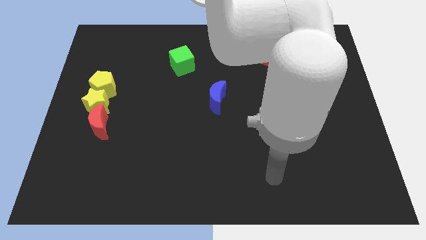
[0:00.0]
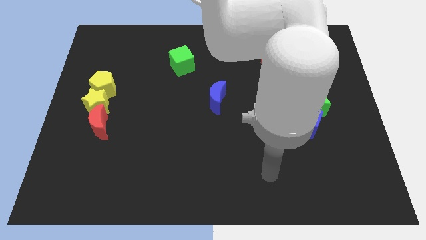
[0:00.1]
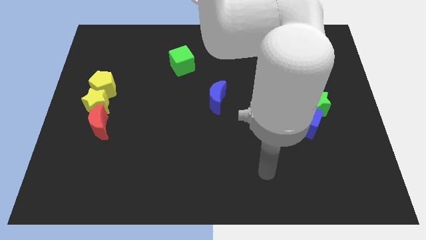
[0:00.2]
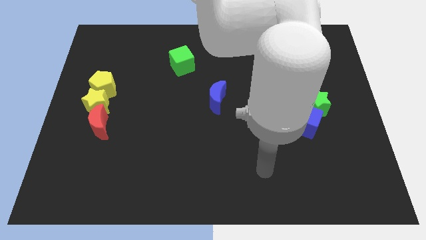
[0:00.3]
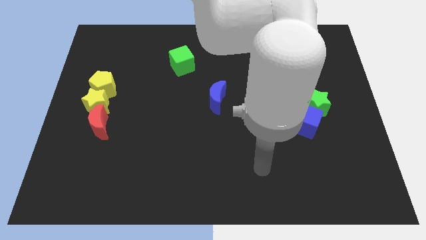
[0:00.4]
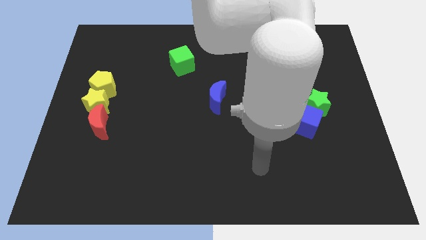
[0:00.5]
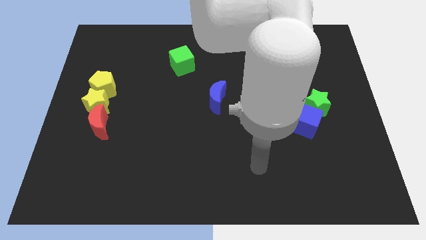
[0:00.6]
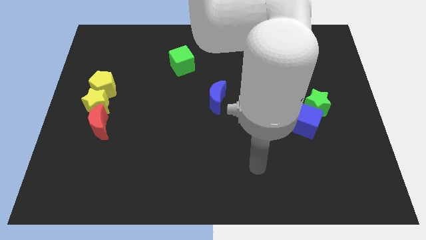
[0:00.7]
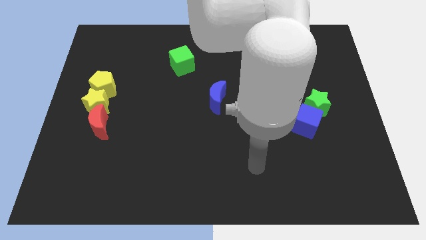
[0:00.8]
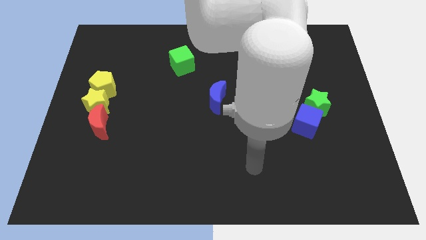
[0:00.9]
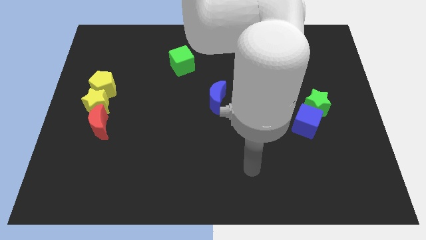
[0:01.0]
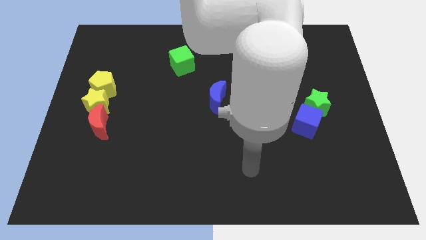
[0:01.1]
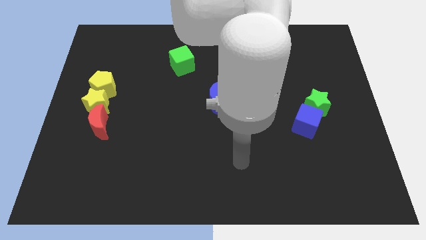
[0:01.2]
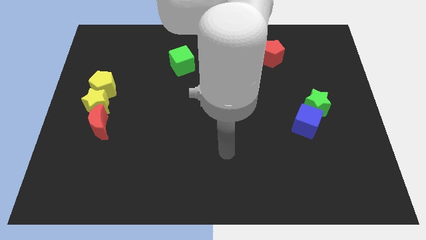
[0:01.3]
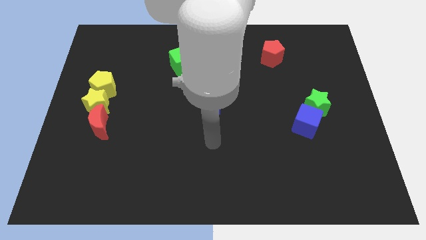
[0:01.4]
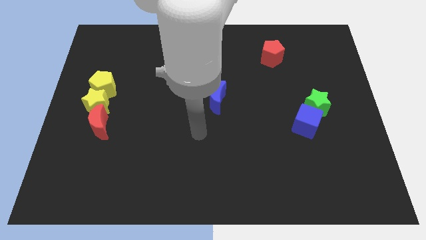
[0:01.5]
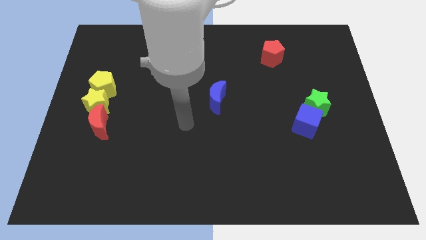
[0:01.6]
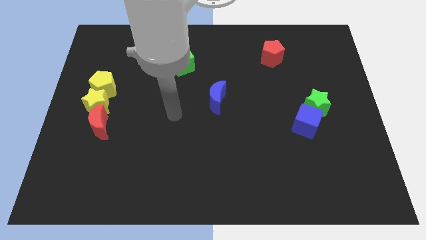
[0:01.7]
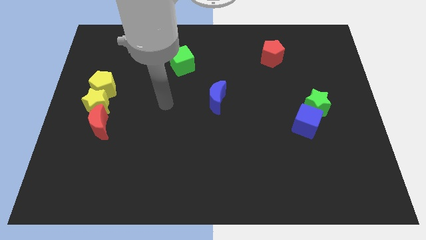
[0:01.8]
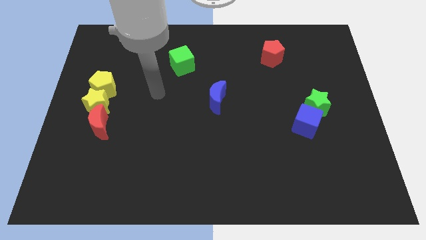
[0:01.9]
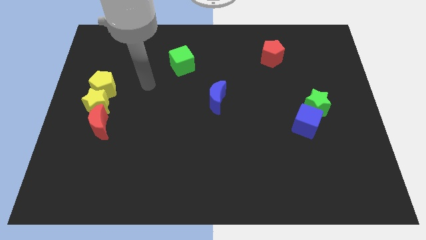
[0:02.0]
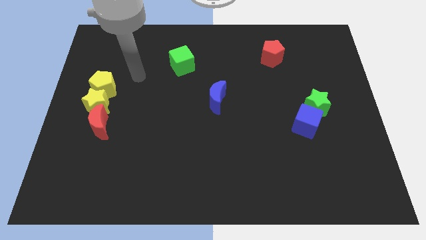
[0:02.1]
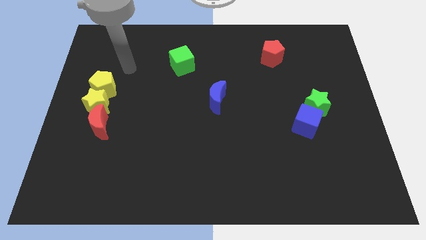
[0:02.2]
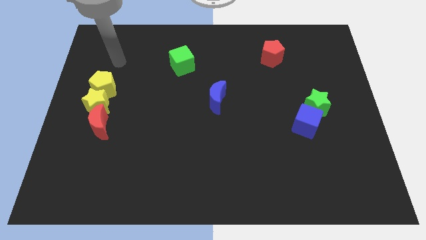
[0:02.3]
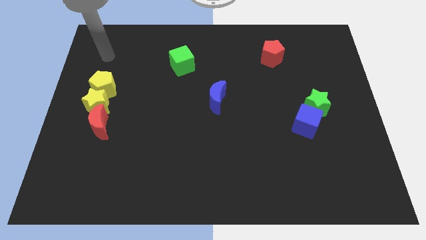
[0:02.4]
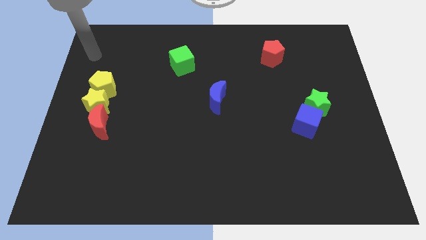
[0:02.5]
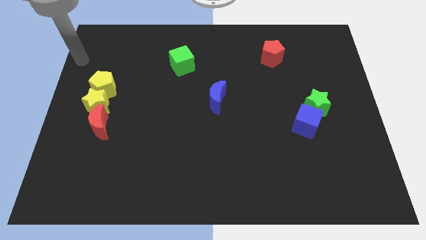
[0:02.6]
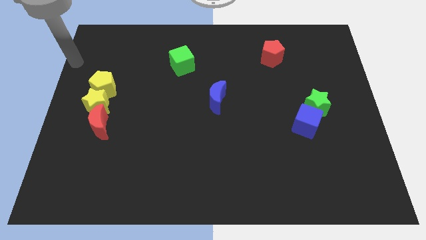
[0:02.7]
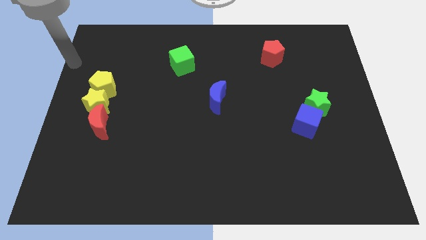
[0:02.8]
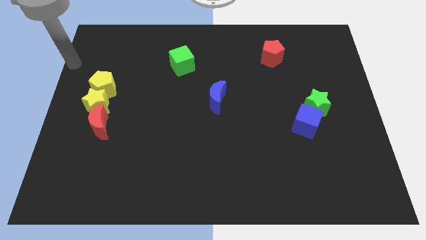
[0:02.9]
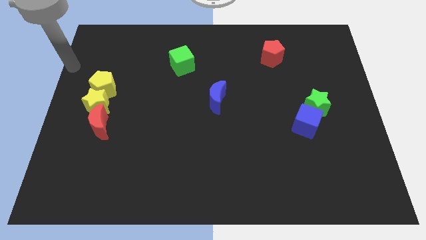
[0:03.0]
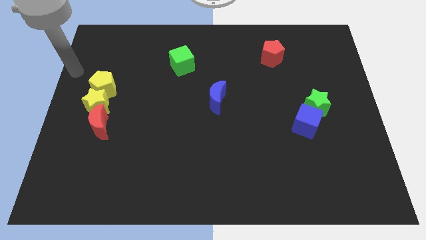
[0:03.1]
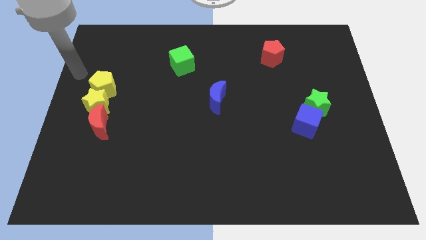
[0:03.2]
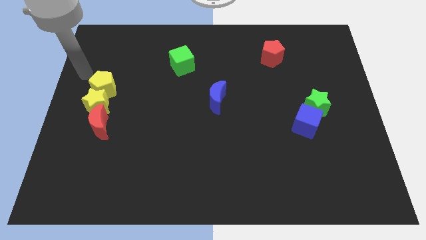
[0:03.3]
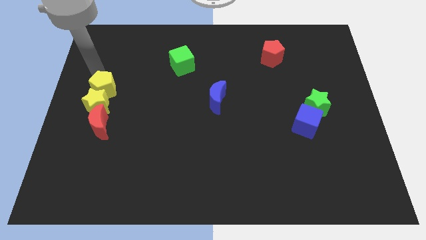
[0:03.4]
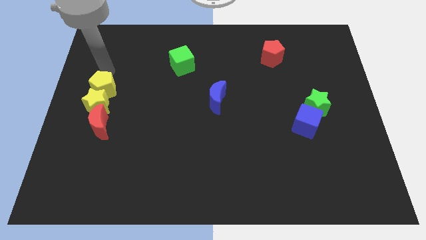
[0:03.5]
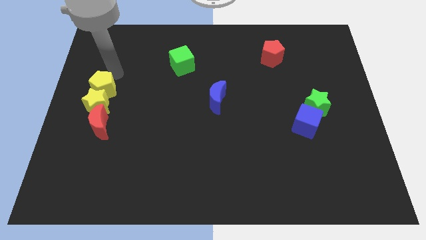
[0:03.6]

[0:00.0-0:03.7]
move your arm towards the top of the yellow pentagon

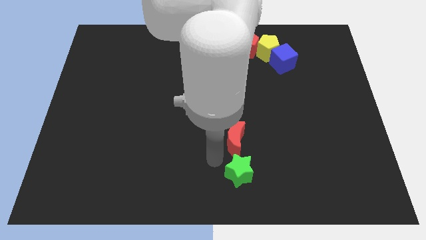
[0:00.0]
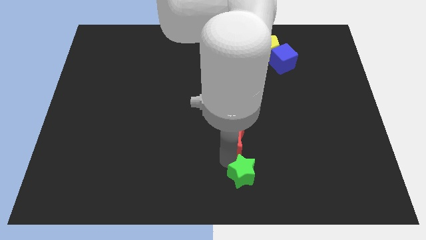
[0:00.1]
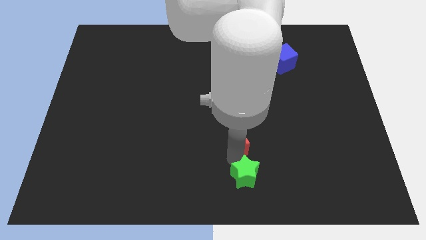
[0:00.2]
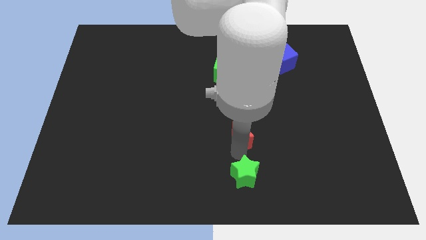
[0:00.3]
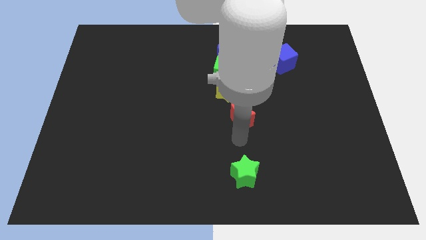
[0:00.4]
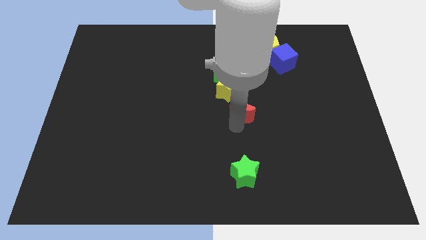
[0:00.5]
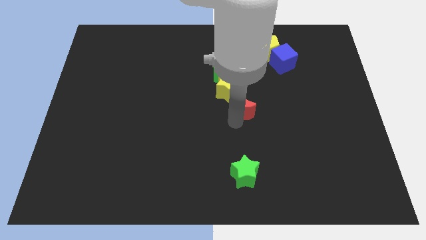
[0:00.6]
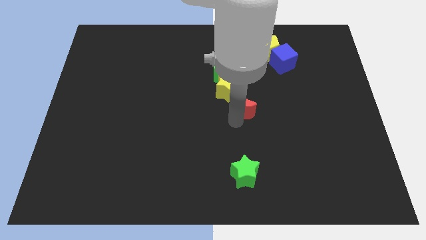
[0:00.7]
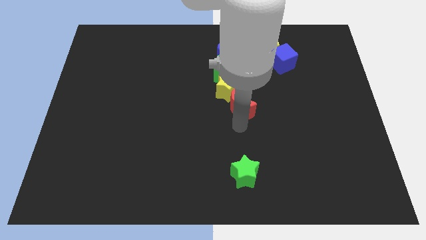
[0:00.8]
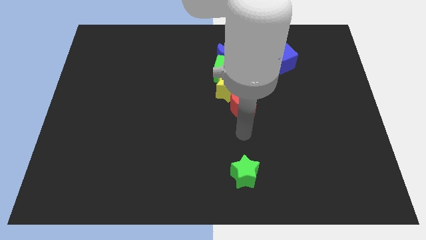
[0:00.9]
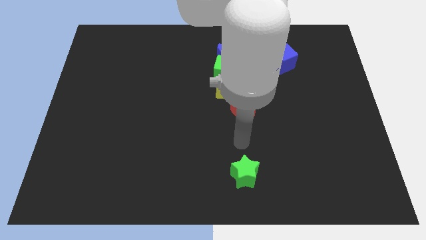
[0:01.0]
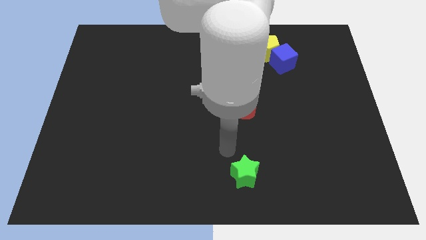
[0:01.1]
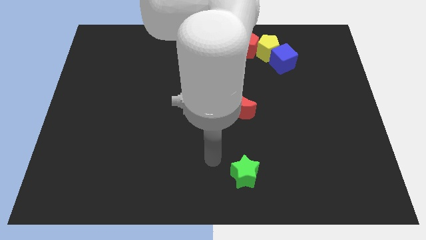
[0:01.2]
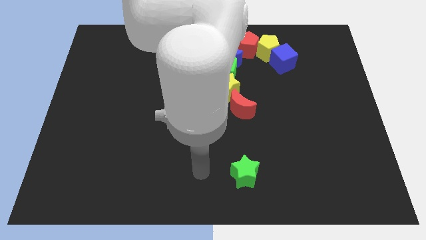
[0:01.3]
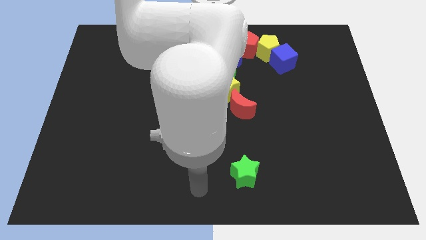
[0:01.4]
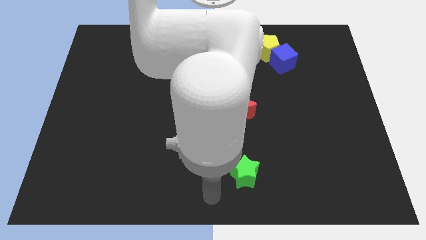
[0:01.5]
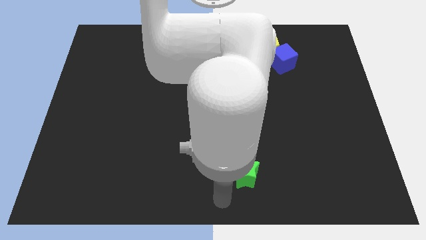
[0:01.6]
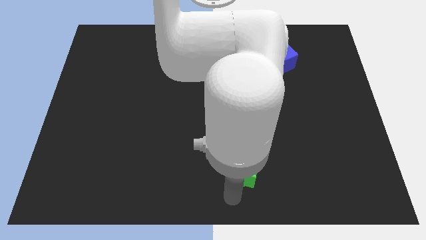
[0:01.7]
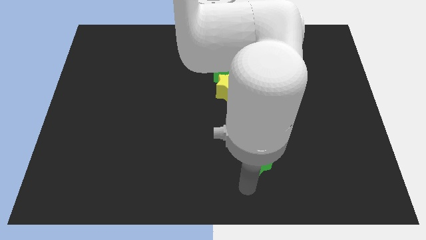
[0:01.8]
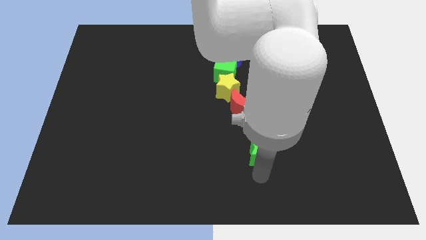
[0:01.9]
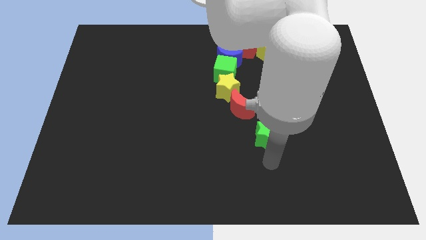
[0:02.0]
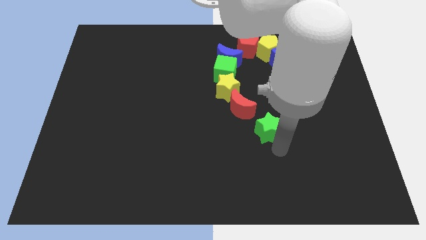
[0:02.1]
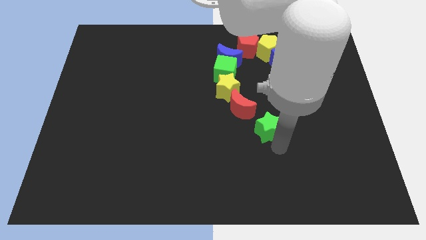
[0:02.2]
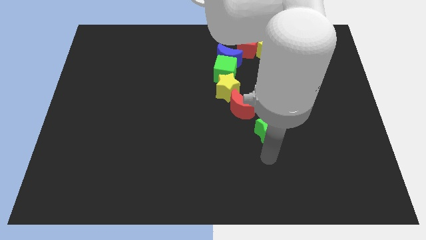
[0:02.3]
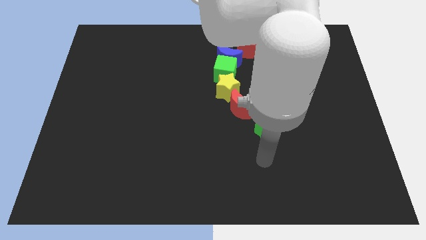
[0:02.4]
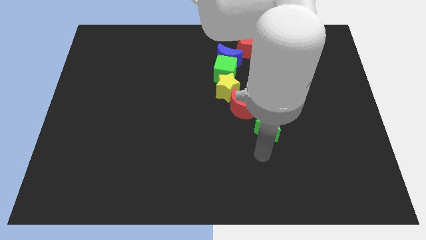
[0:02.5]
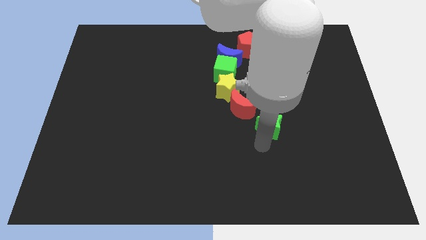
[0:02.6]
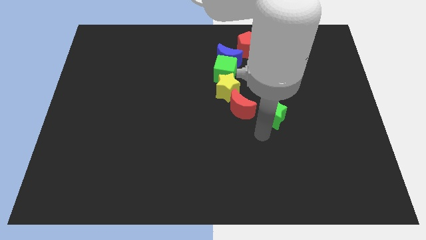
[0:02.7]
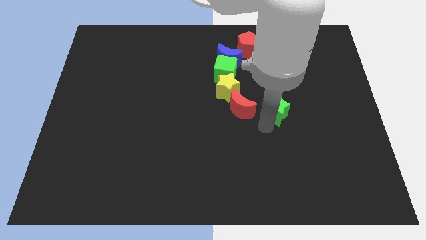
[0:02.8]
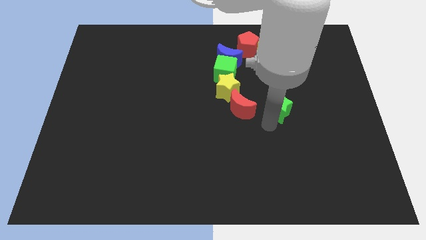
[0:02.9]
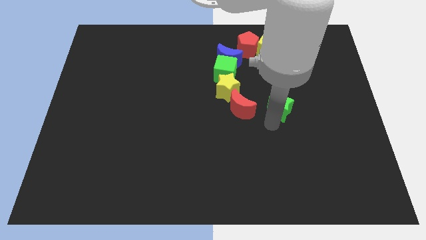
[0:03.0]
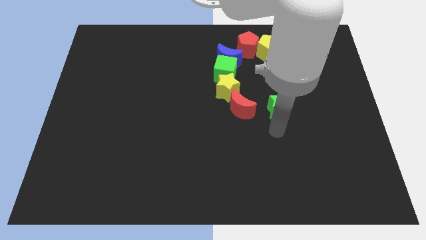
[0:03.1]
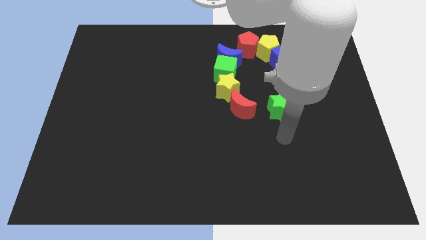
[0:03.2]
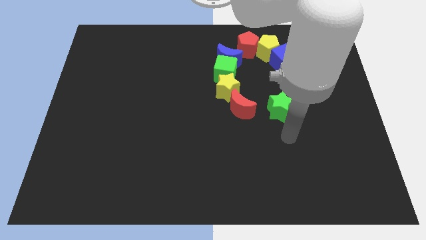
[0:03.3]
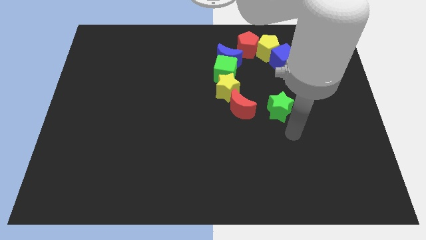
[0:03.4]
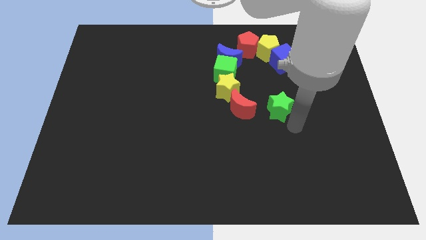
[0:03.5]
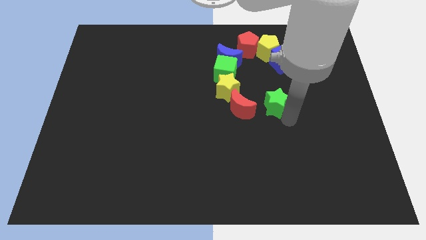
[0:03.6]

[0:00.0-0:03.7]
place the green star to the right of the red moon

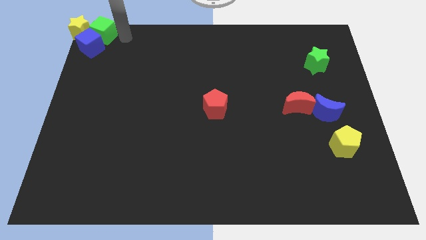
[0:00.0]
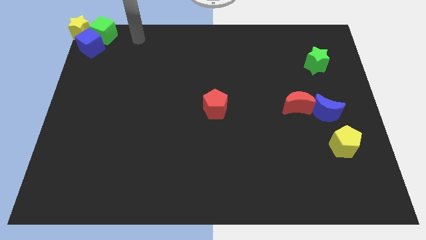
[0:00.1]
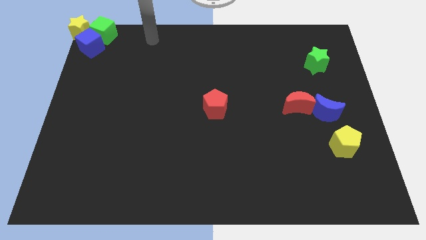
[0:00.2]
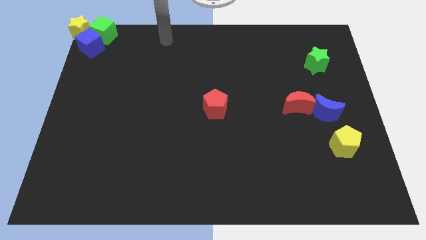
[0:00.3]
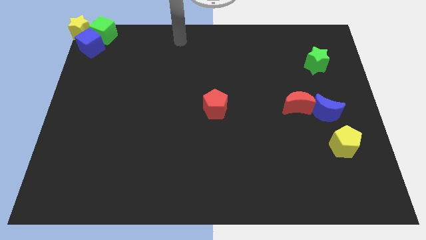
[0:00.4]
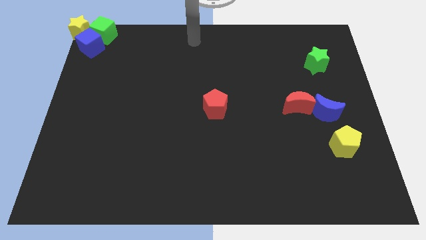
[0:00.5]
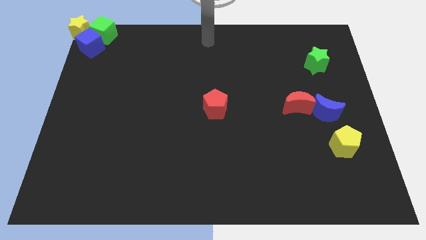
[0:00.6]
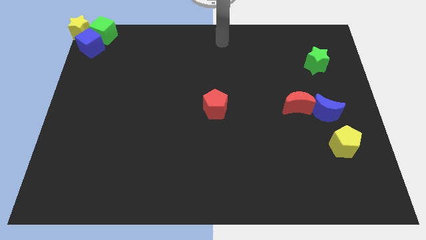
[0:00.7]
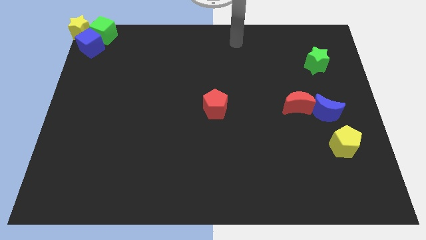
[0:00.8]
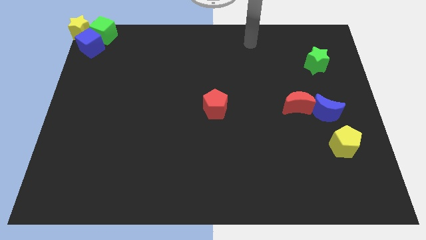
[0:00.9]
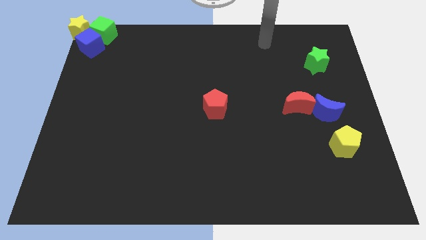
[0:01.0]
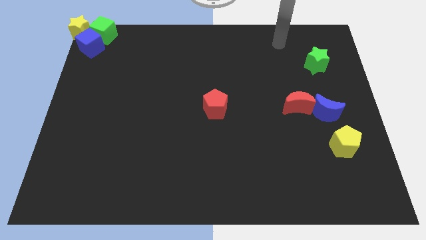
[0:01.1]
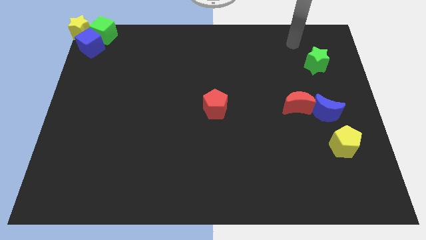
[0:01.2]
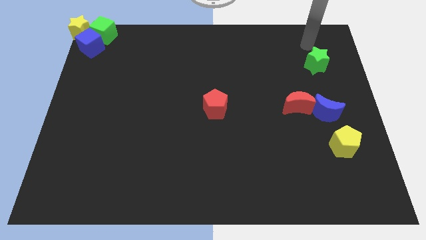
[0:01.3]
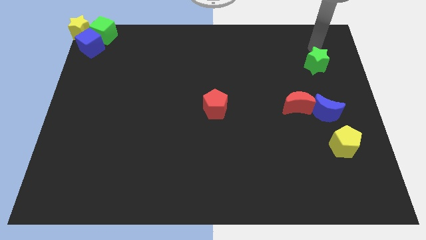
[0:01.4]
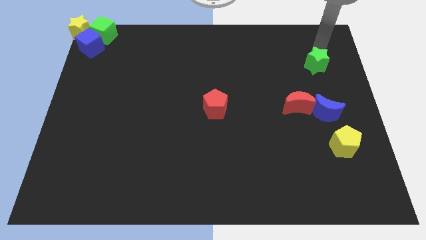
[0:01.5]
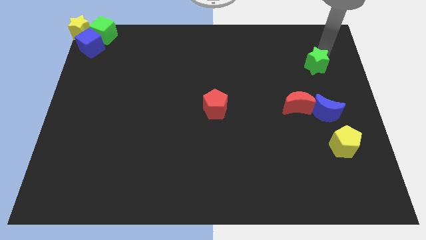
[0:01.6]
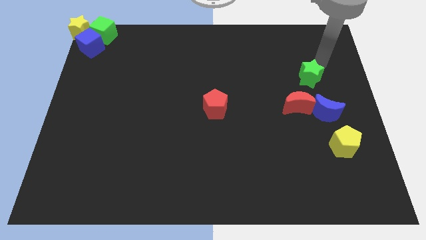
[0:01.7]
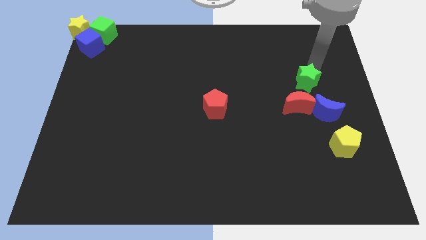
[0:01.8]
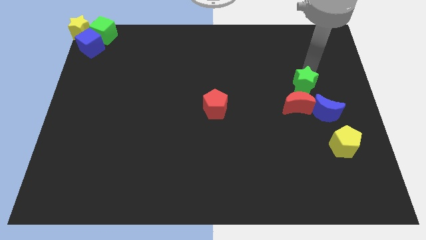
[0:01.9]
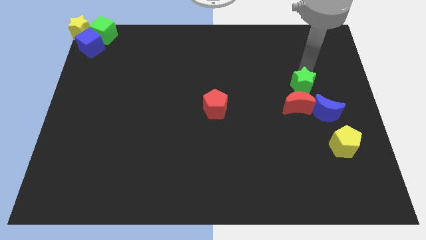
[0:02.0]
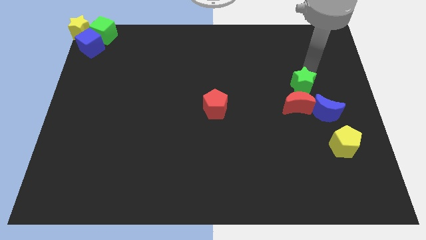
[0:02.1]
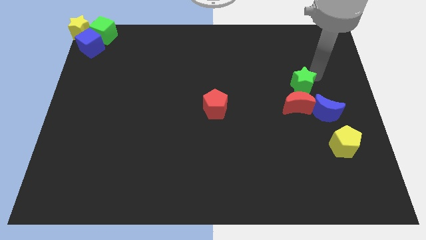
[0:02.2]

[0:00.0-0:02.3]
move the green star to the top of the red crescent
